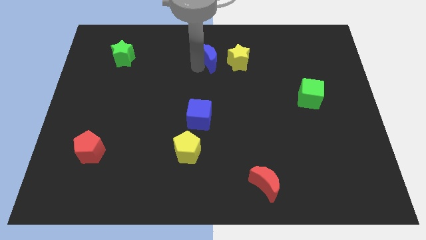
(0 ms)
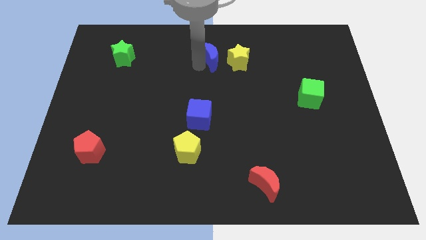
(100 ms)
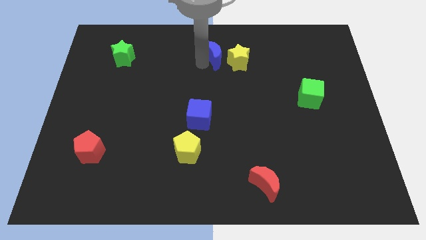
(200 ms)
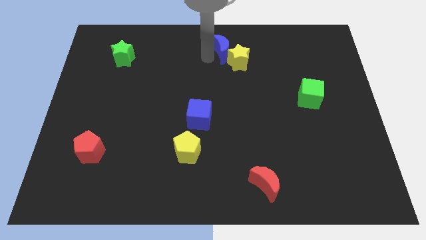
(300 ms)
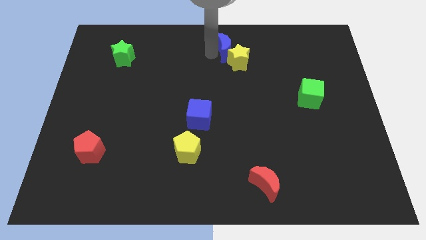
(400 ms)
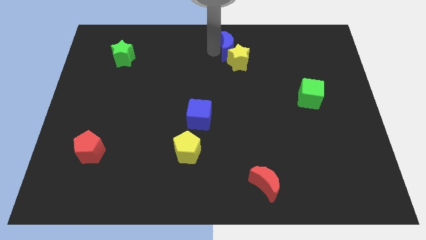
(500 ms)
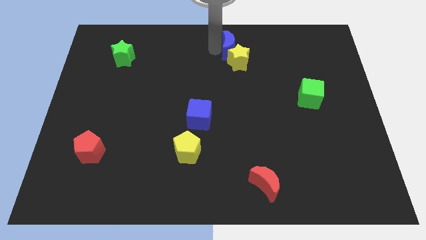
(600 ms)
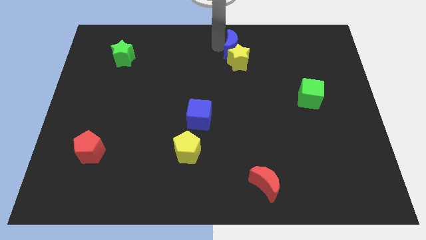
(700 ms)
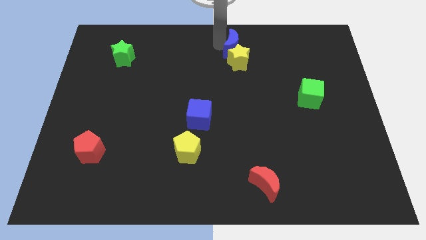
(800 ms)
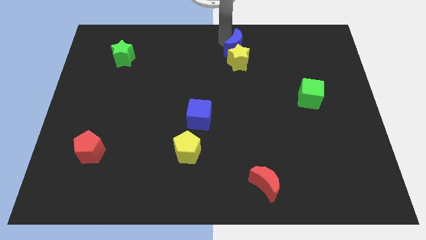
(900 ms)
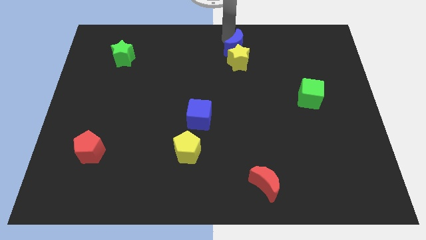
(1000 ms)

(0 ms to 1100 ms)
place the blue crescent above the yellow star

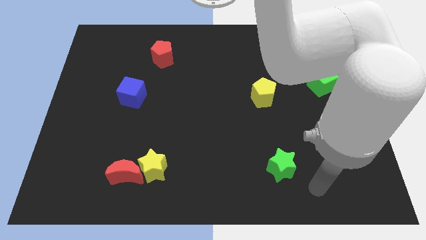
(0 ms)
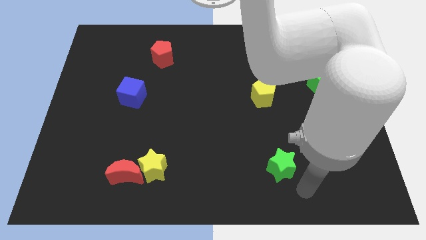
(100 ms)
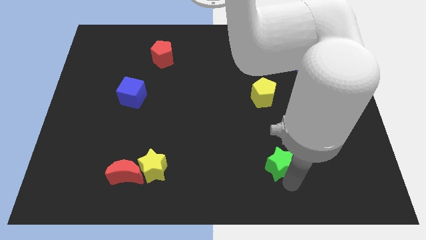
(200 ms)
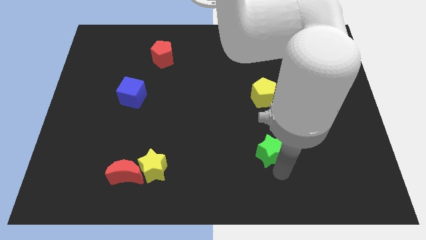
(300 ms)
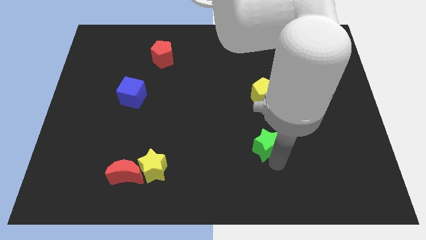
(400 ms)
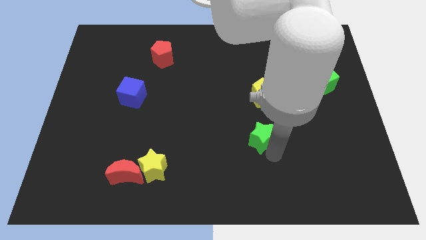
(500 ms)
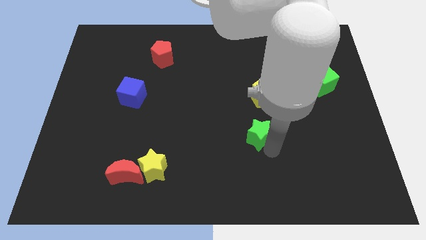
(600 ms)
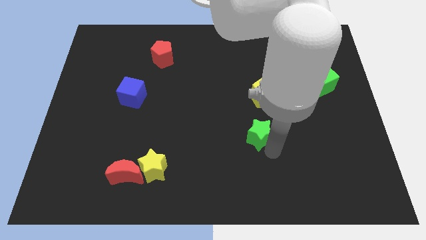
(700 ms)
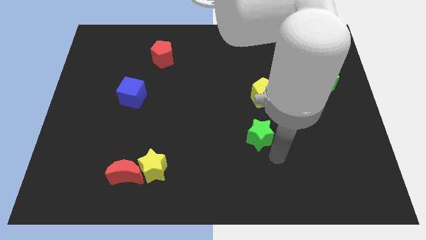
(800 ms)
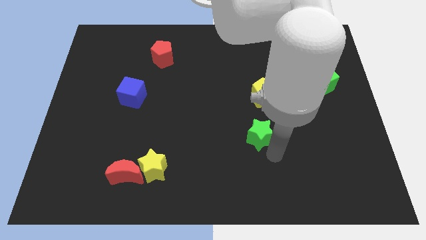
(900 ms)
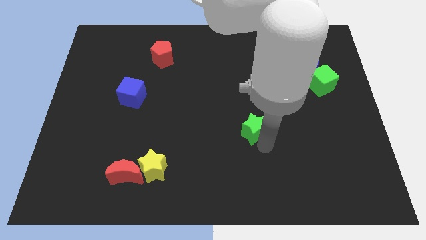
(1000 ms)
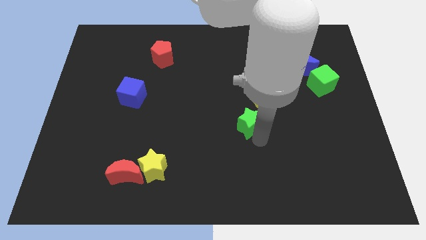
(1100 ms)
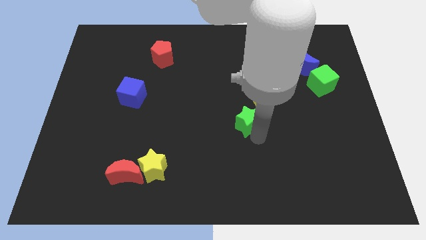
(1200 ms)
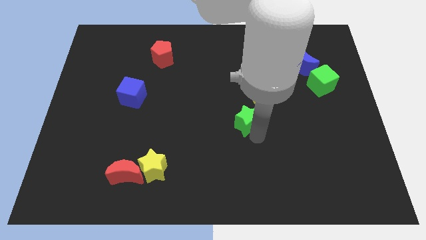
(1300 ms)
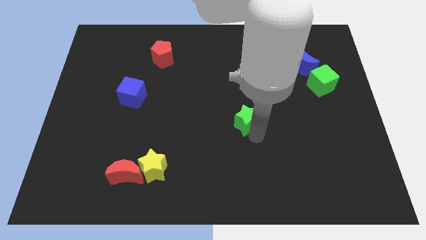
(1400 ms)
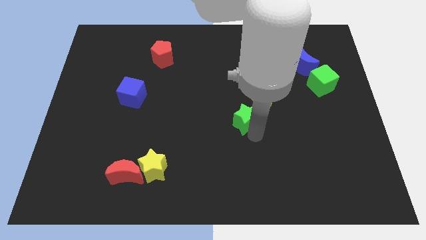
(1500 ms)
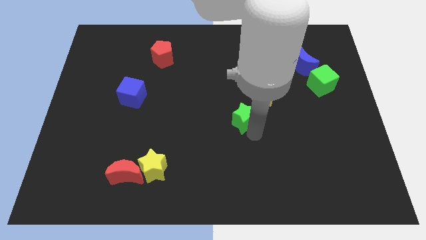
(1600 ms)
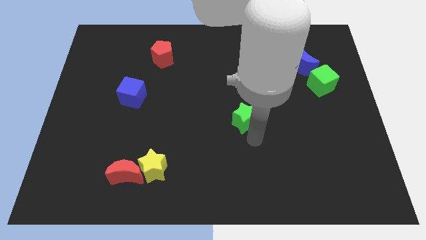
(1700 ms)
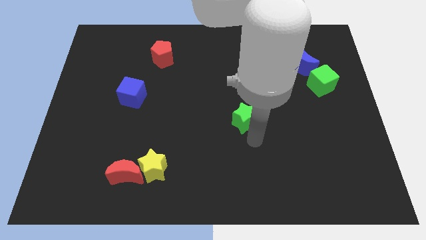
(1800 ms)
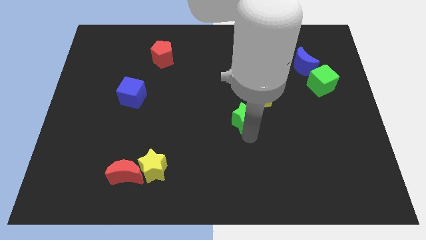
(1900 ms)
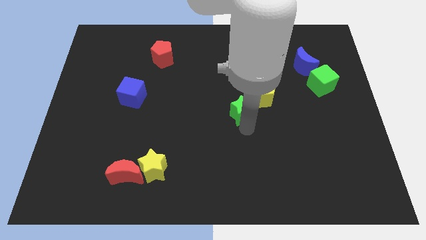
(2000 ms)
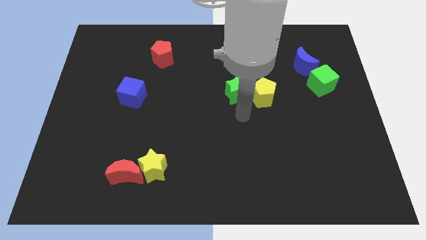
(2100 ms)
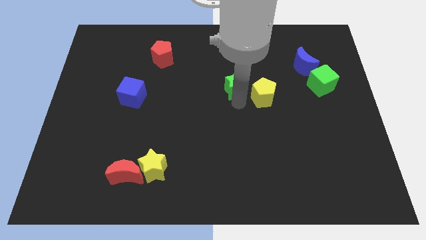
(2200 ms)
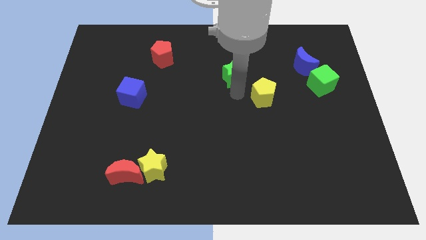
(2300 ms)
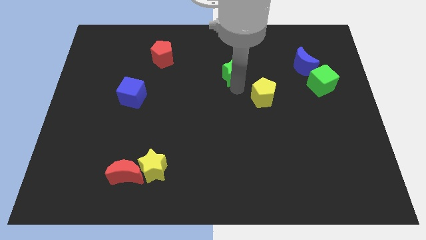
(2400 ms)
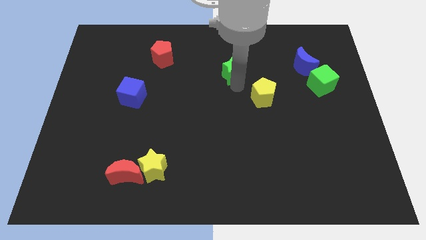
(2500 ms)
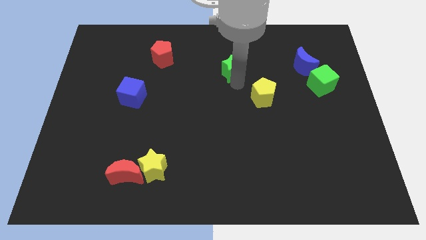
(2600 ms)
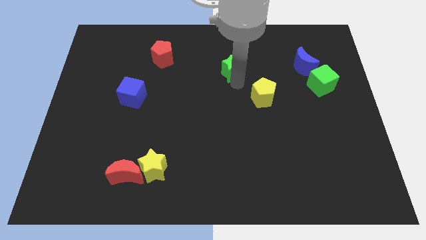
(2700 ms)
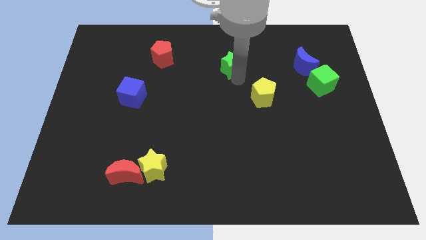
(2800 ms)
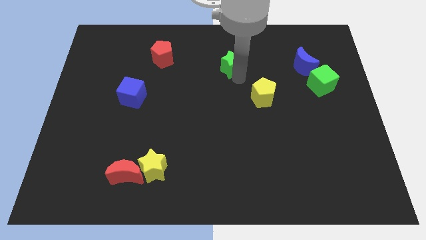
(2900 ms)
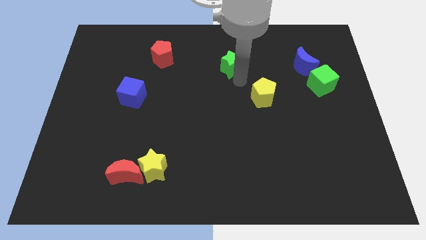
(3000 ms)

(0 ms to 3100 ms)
place the green star horizontally to the left side of the blue crescent

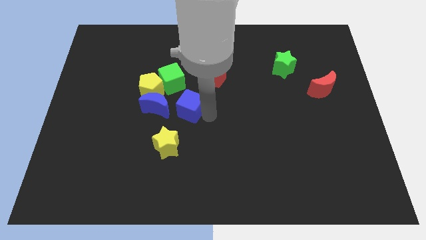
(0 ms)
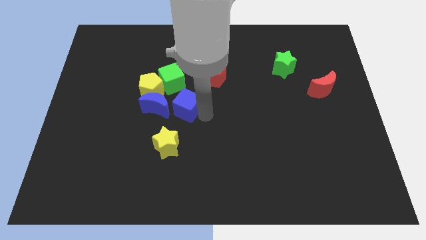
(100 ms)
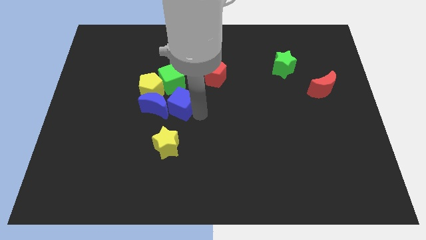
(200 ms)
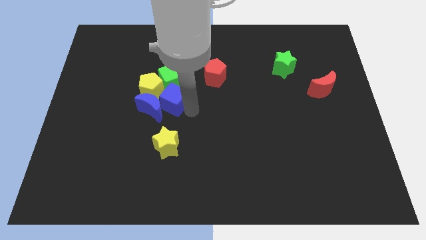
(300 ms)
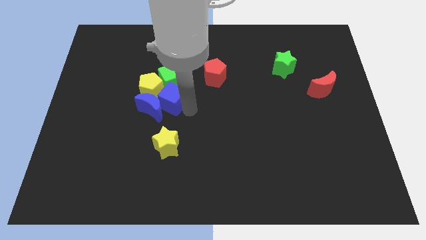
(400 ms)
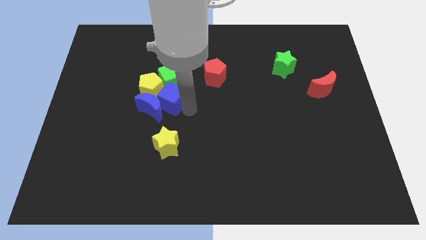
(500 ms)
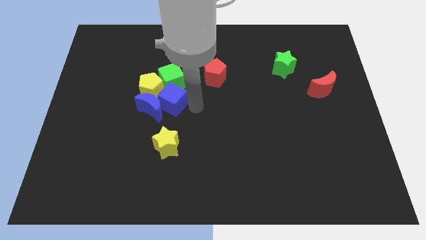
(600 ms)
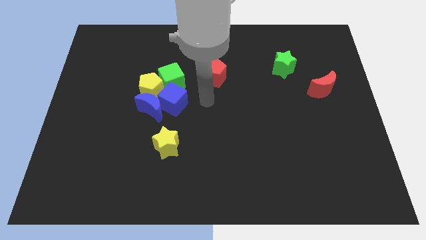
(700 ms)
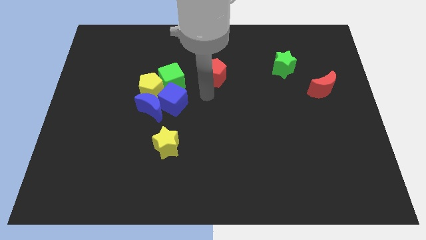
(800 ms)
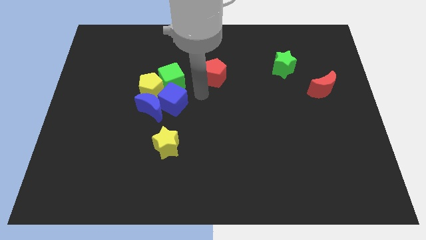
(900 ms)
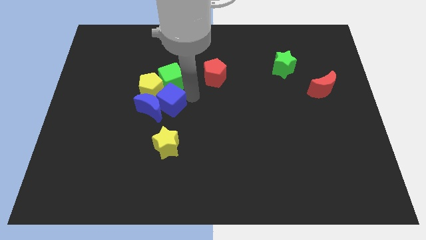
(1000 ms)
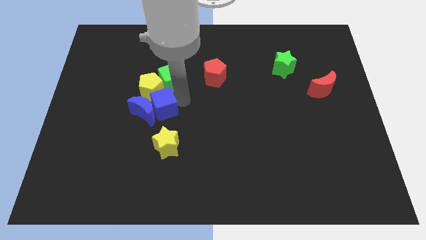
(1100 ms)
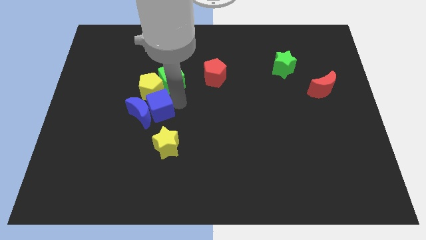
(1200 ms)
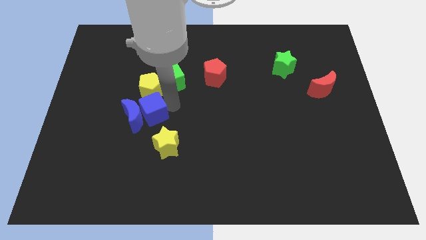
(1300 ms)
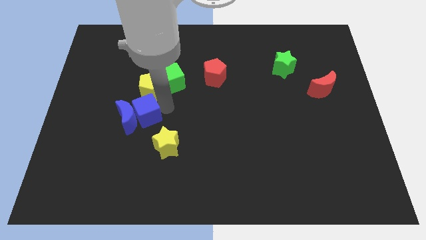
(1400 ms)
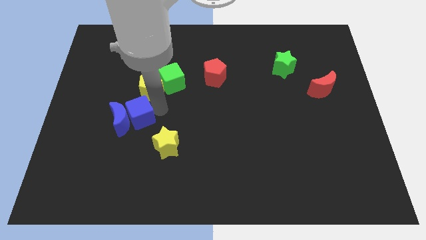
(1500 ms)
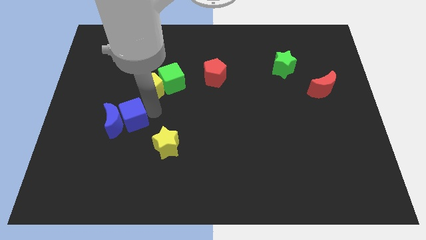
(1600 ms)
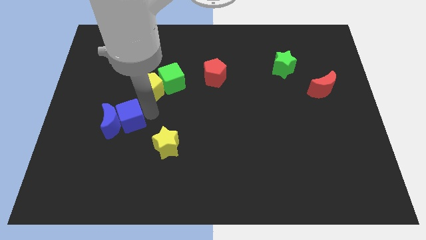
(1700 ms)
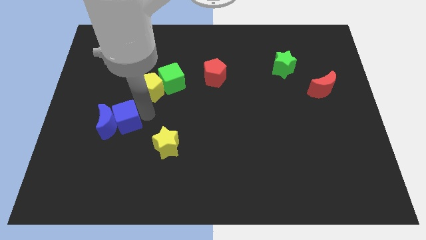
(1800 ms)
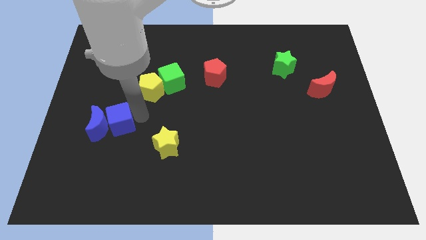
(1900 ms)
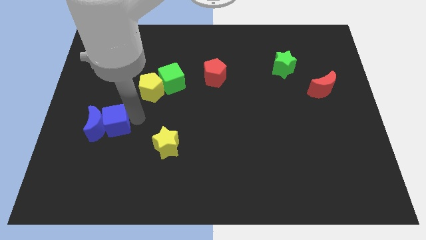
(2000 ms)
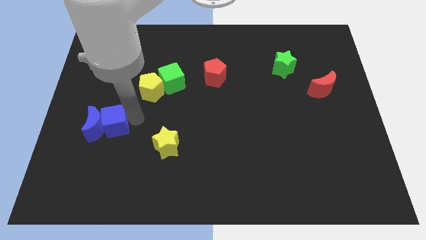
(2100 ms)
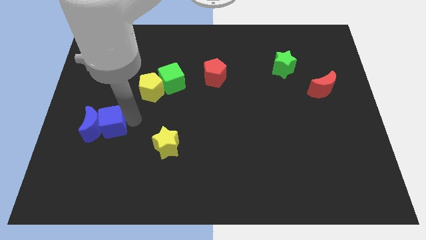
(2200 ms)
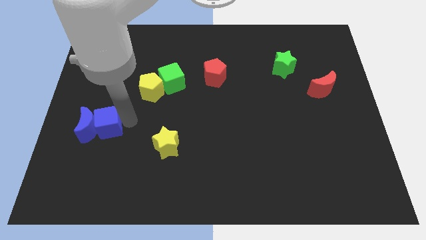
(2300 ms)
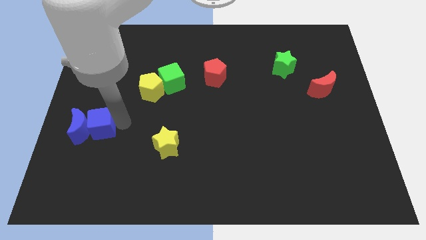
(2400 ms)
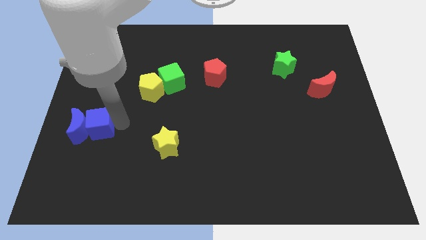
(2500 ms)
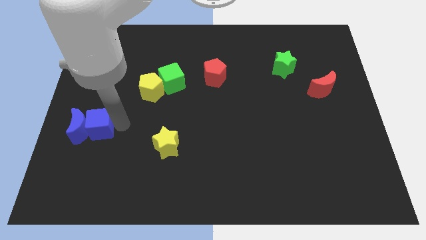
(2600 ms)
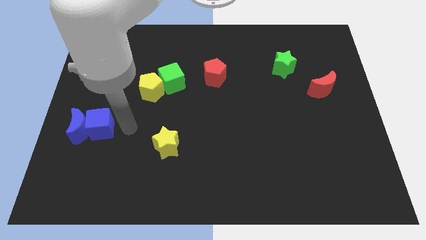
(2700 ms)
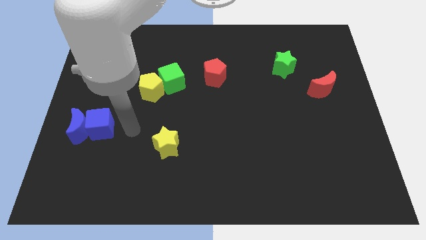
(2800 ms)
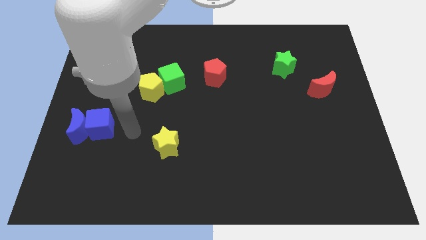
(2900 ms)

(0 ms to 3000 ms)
push the blue blocks towards the left side of the board

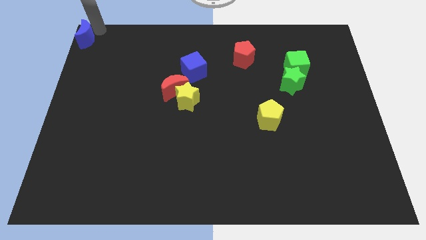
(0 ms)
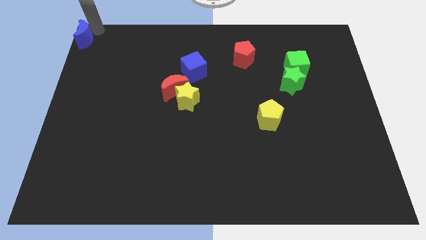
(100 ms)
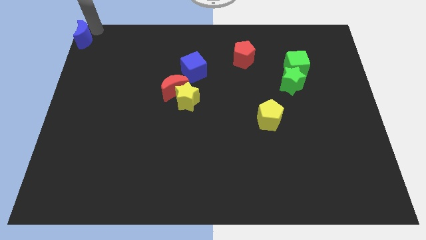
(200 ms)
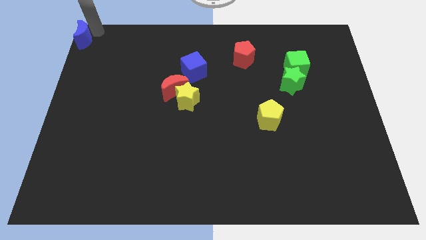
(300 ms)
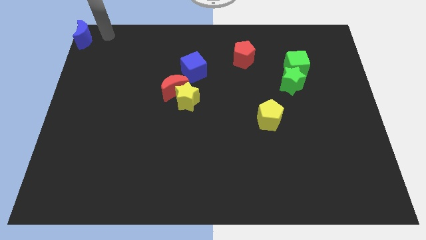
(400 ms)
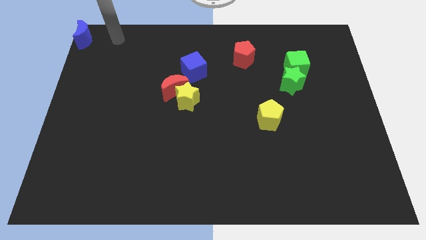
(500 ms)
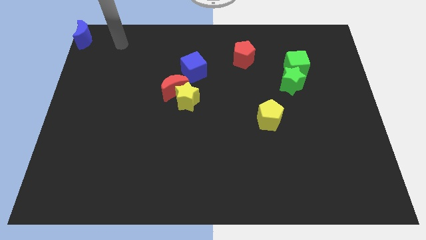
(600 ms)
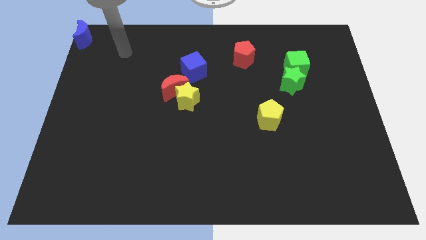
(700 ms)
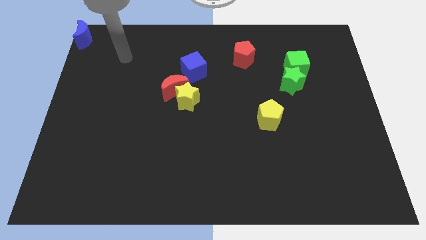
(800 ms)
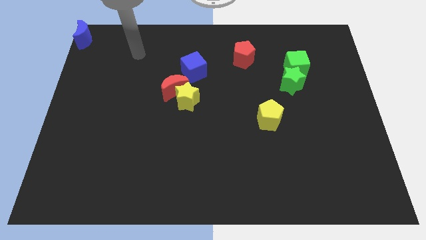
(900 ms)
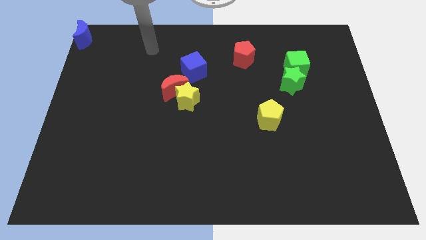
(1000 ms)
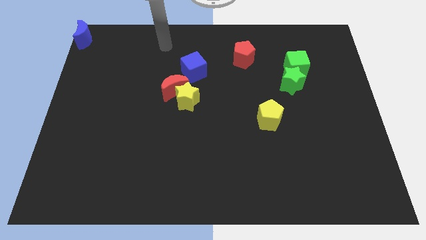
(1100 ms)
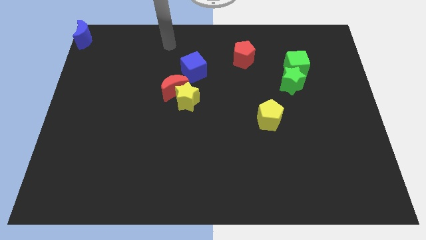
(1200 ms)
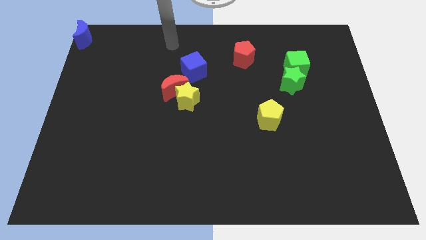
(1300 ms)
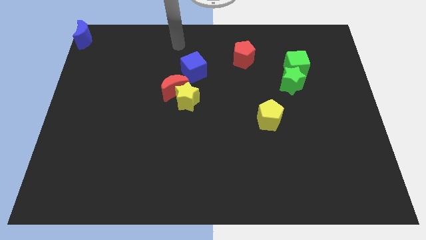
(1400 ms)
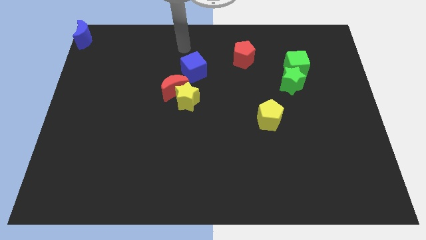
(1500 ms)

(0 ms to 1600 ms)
move the arm away from the blue moon

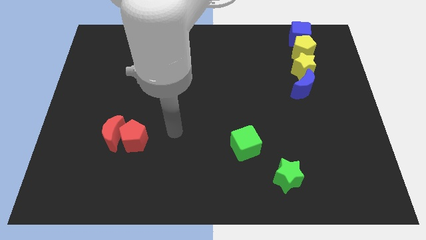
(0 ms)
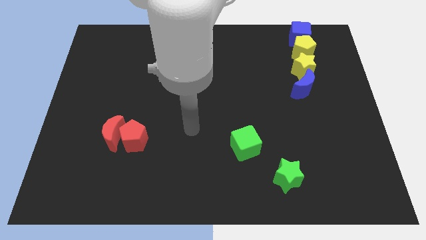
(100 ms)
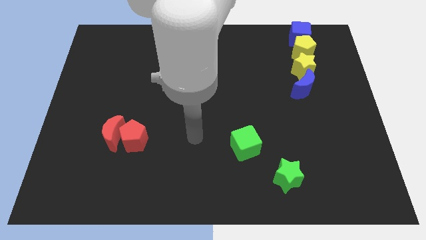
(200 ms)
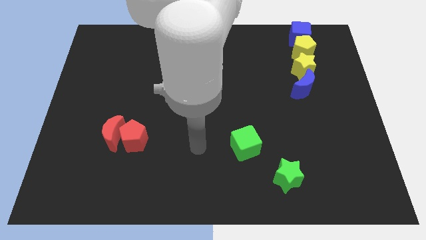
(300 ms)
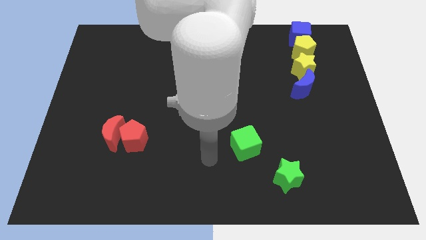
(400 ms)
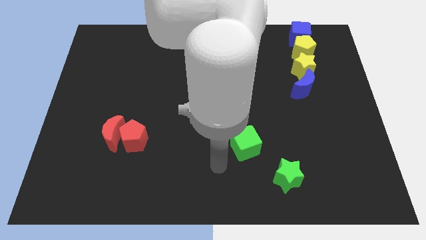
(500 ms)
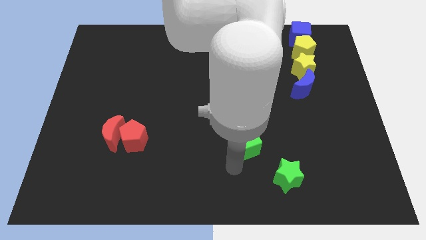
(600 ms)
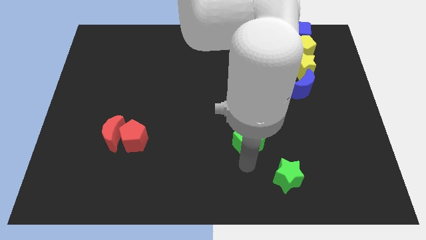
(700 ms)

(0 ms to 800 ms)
point your arm at the bottom of the green cube
